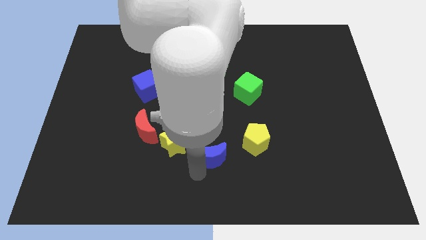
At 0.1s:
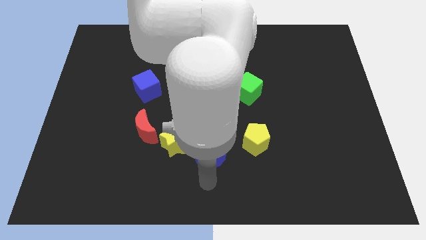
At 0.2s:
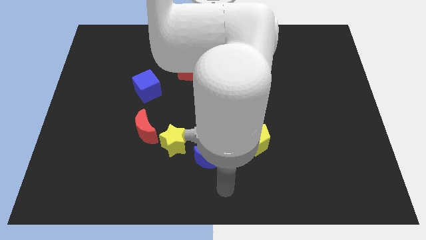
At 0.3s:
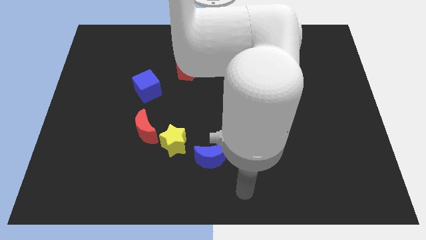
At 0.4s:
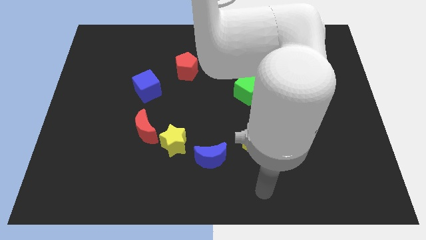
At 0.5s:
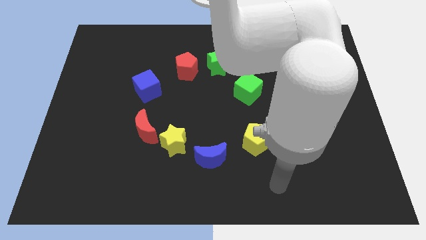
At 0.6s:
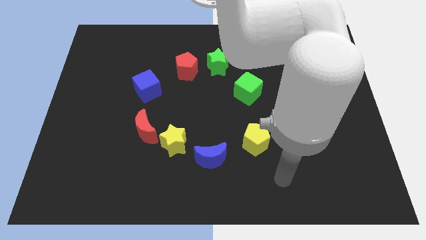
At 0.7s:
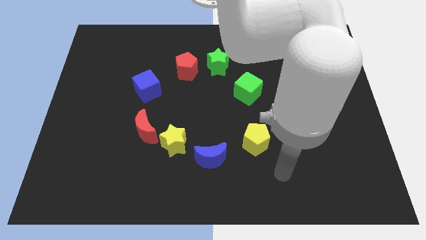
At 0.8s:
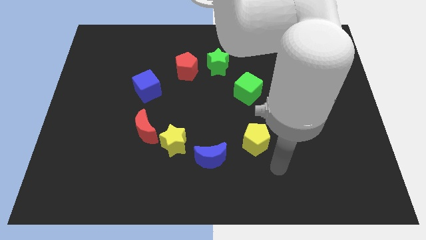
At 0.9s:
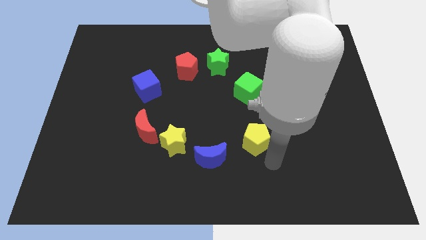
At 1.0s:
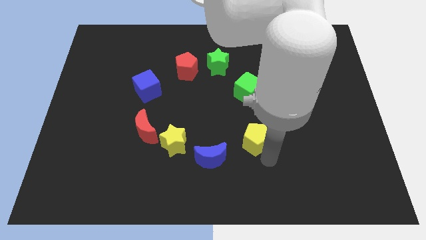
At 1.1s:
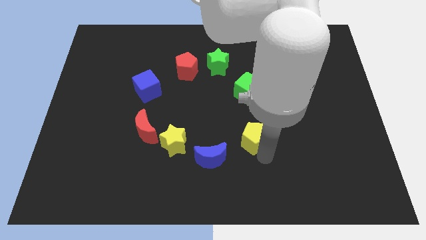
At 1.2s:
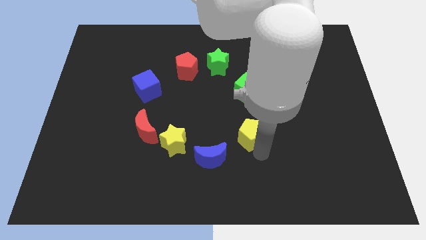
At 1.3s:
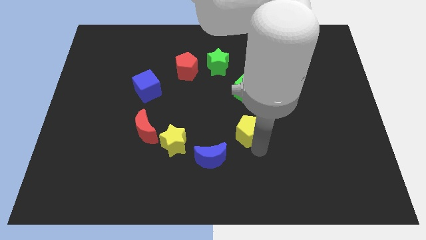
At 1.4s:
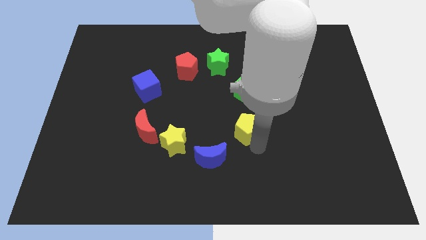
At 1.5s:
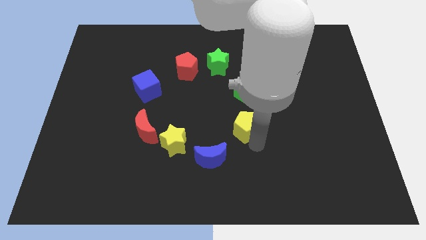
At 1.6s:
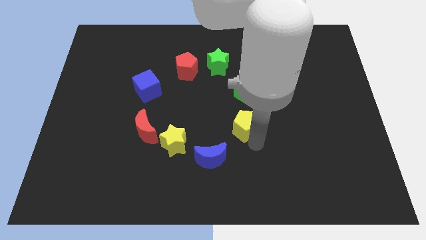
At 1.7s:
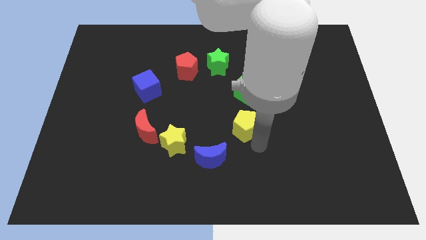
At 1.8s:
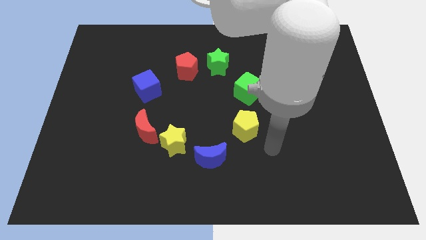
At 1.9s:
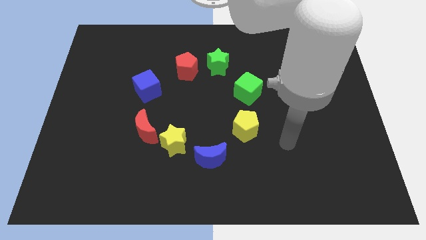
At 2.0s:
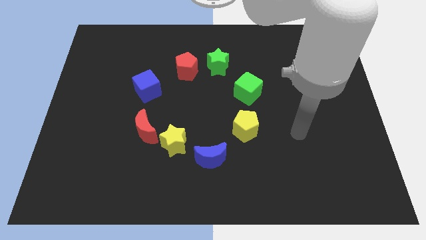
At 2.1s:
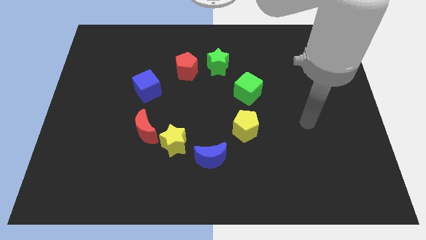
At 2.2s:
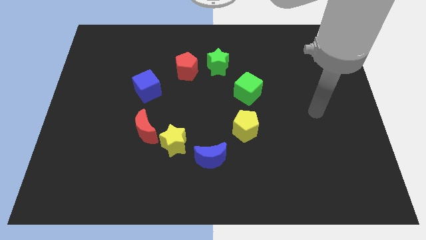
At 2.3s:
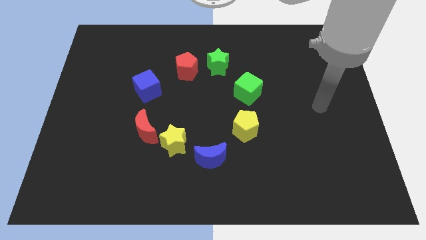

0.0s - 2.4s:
push the yellow pentagon towards the green cube

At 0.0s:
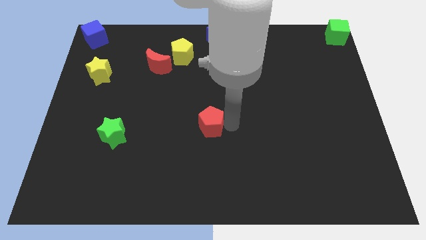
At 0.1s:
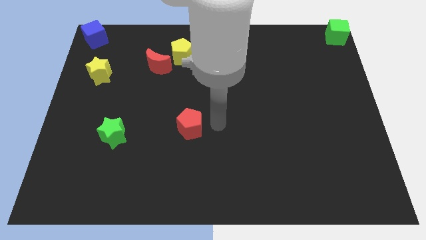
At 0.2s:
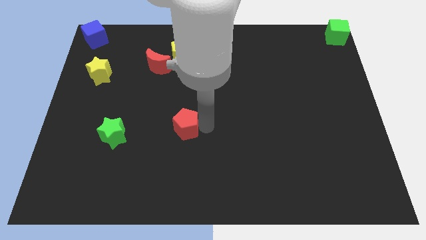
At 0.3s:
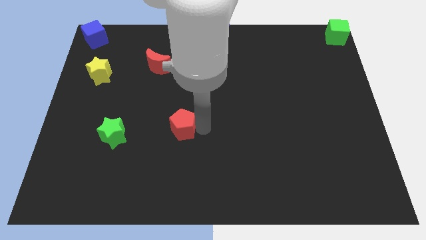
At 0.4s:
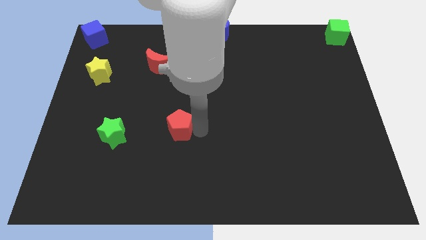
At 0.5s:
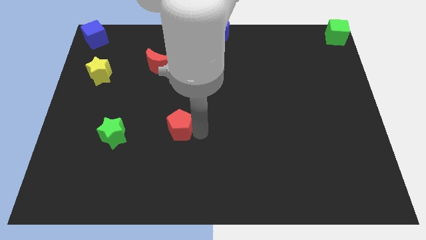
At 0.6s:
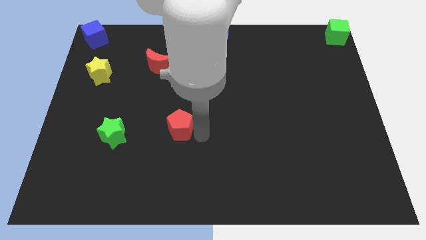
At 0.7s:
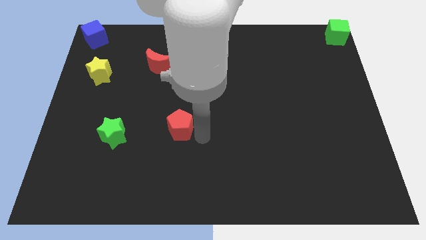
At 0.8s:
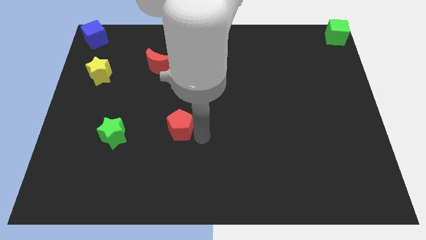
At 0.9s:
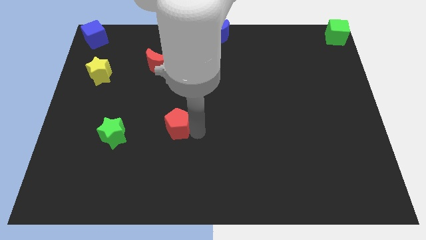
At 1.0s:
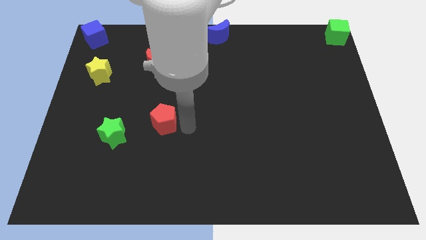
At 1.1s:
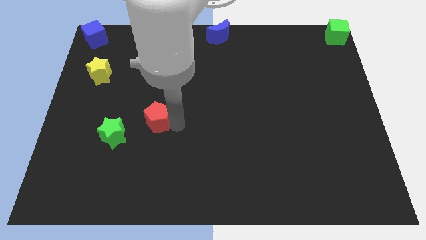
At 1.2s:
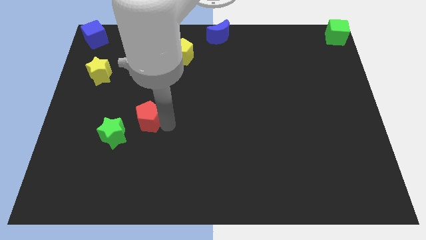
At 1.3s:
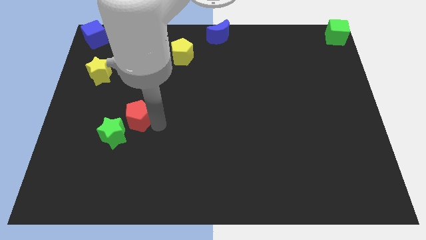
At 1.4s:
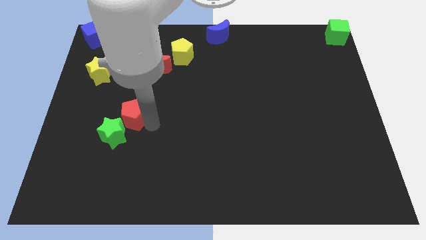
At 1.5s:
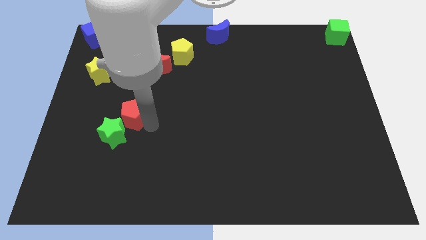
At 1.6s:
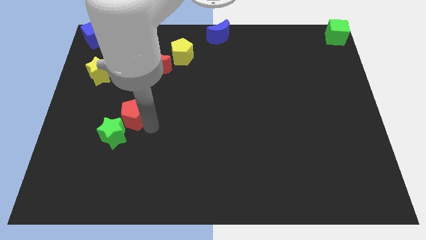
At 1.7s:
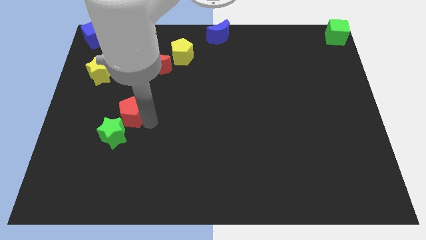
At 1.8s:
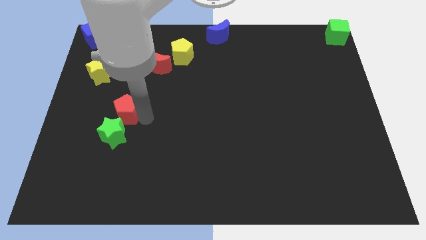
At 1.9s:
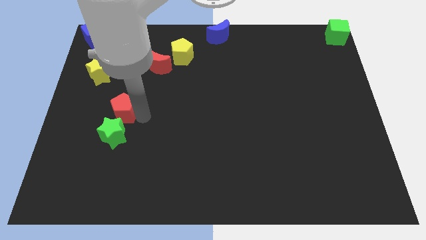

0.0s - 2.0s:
push the red pentagon to the top of the green star

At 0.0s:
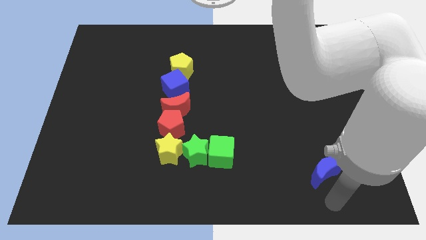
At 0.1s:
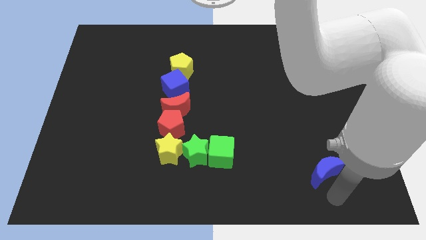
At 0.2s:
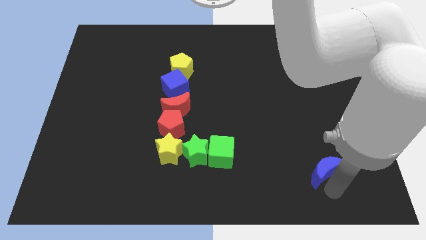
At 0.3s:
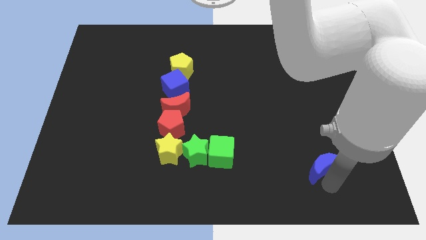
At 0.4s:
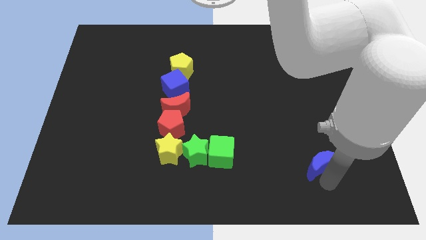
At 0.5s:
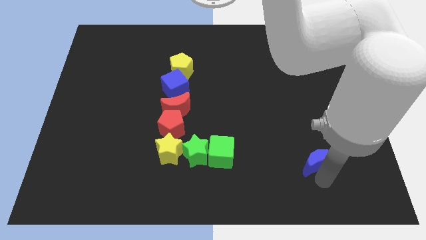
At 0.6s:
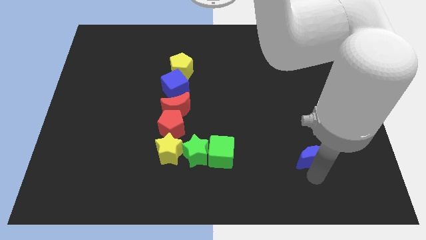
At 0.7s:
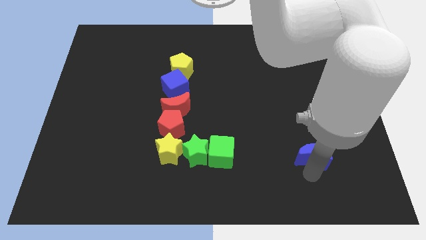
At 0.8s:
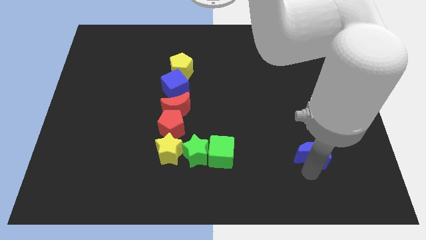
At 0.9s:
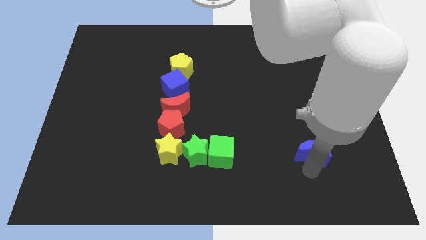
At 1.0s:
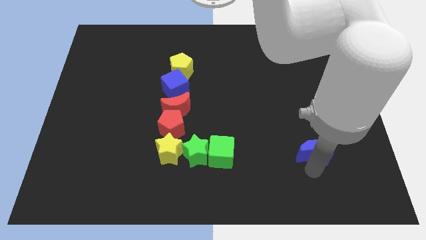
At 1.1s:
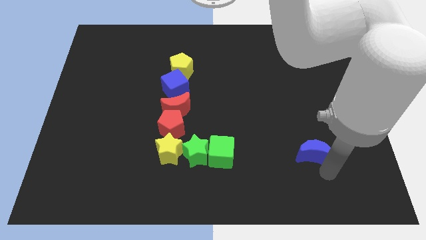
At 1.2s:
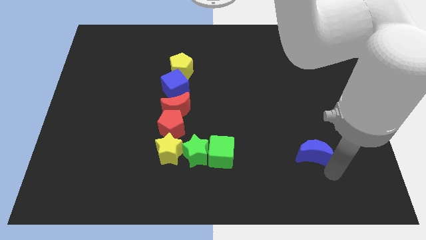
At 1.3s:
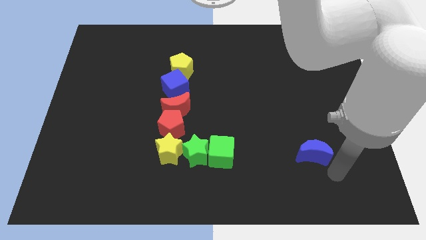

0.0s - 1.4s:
move the blue crescent horizontal to the green cube

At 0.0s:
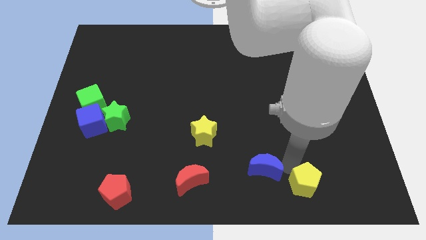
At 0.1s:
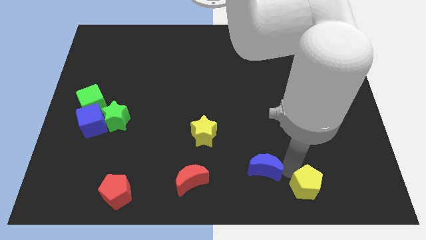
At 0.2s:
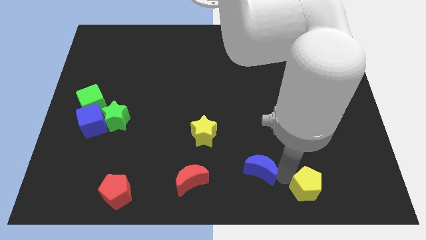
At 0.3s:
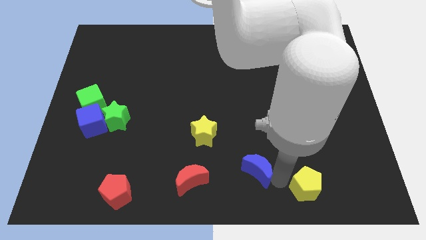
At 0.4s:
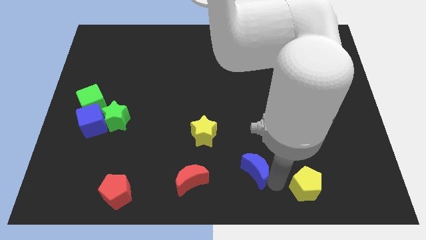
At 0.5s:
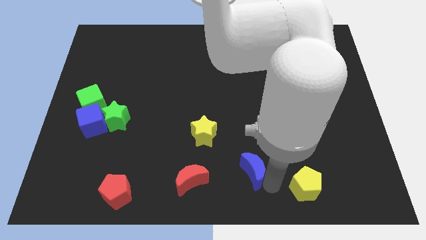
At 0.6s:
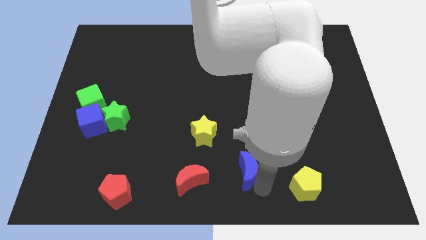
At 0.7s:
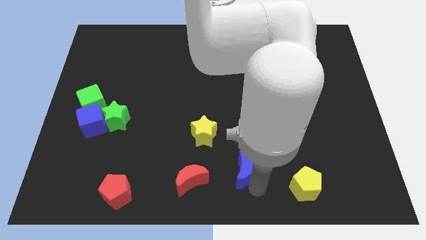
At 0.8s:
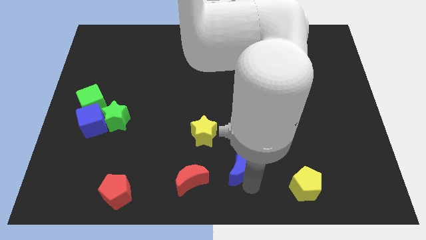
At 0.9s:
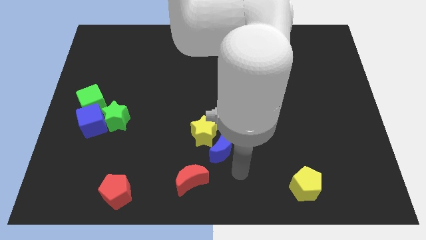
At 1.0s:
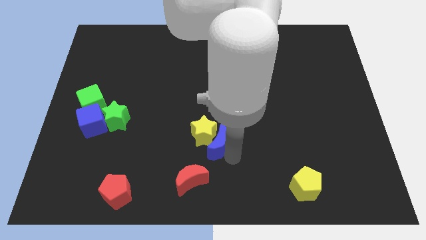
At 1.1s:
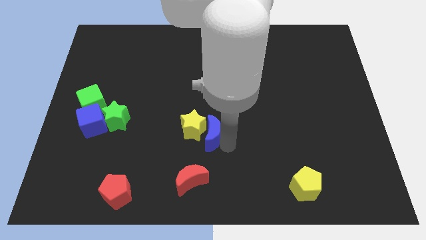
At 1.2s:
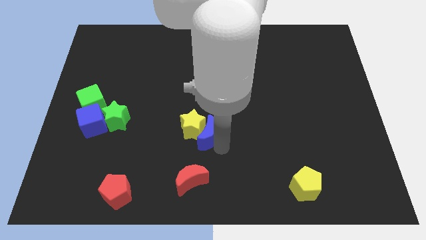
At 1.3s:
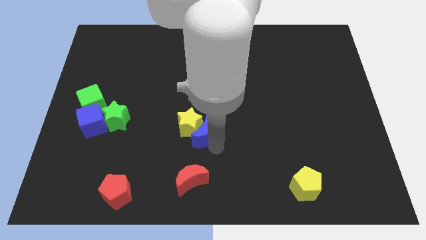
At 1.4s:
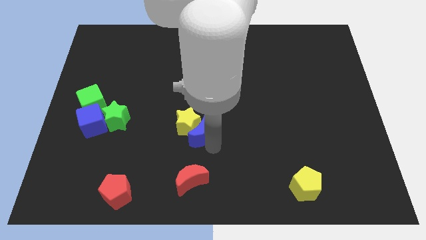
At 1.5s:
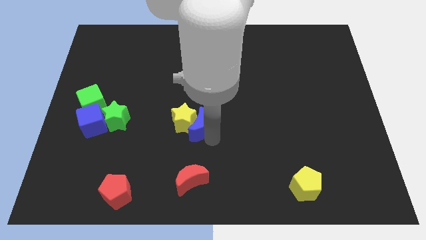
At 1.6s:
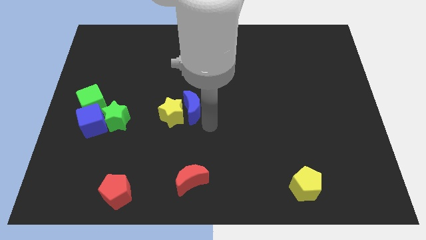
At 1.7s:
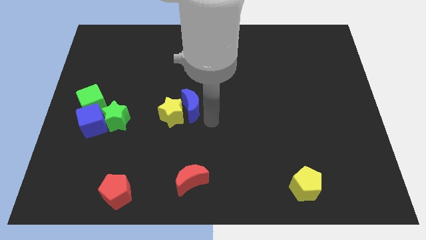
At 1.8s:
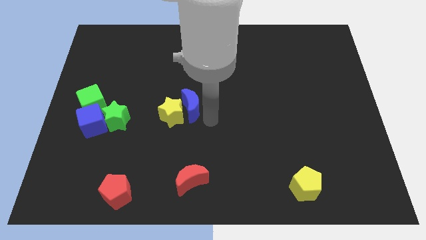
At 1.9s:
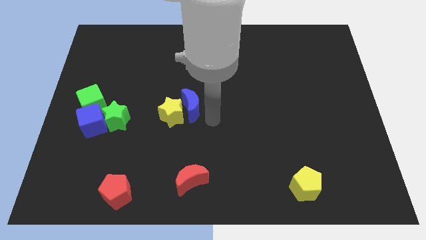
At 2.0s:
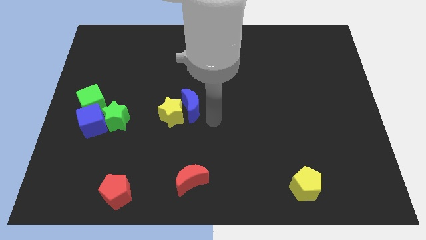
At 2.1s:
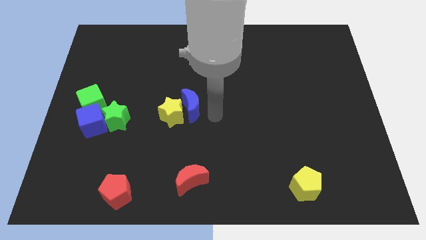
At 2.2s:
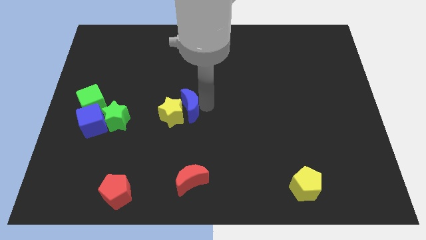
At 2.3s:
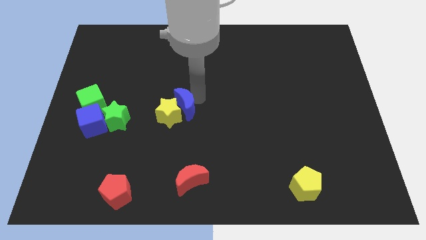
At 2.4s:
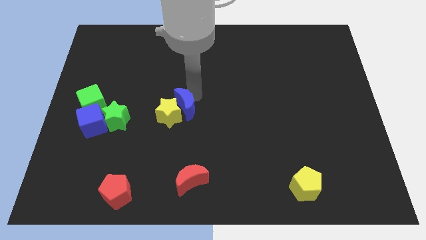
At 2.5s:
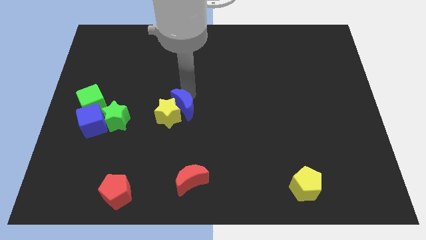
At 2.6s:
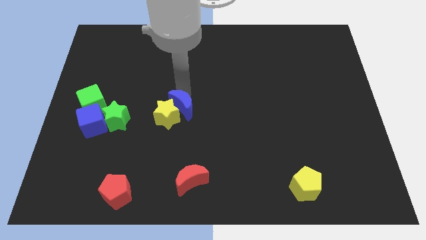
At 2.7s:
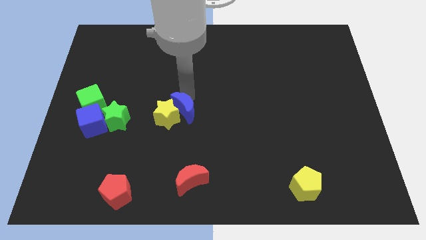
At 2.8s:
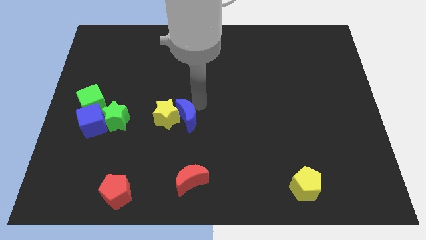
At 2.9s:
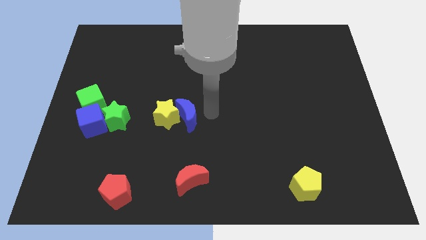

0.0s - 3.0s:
move blue moon into the yellow star

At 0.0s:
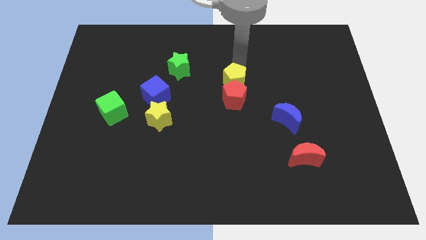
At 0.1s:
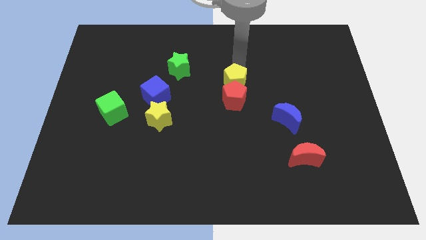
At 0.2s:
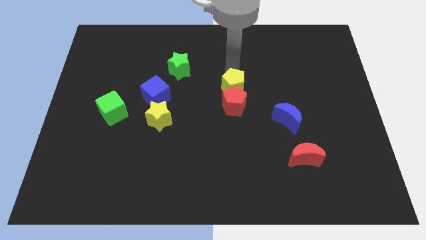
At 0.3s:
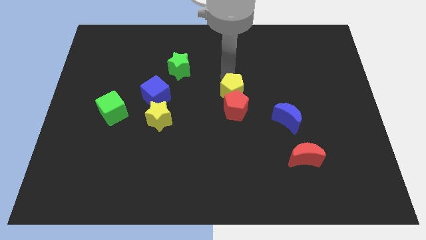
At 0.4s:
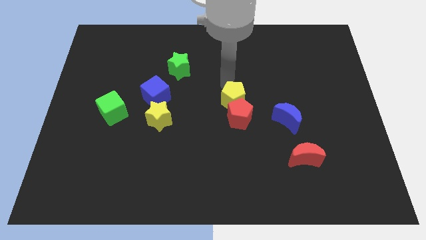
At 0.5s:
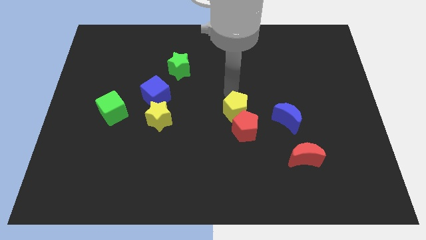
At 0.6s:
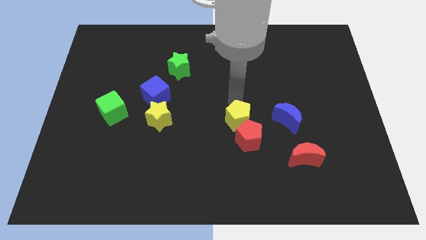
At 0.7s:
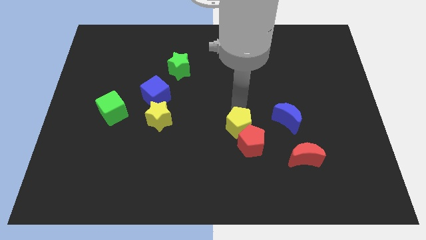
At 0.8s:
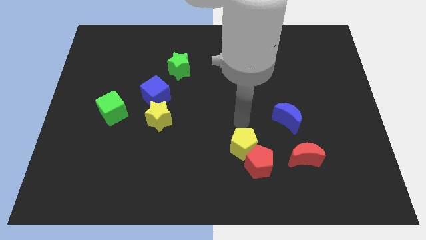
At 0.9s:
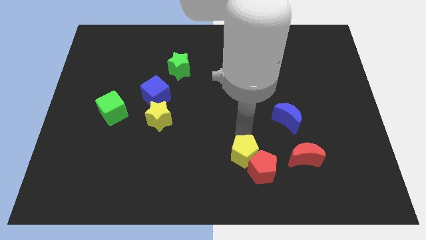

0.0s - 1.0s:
place the yellow pentagon and the red pentagon to the left side of the red crescent
